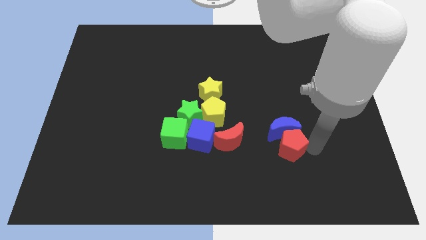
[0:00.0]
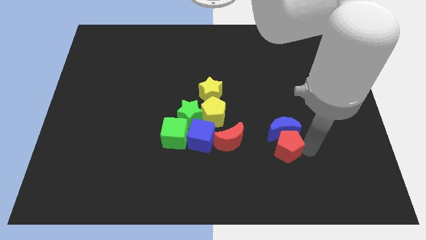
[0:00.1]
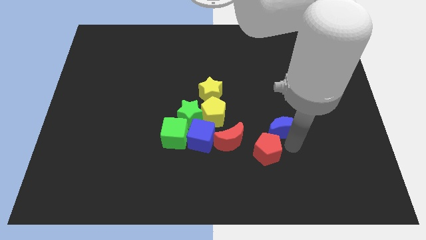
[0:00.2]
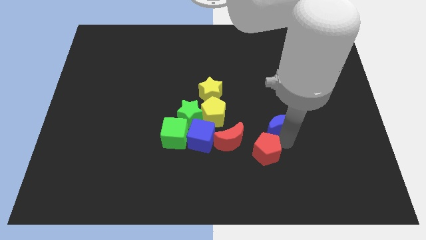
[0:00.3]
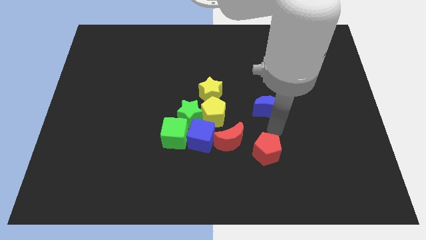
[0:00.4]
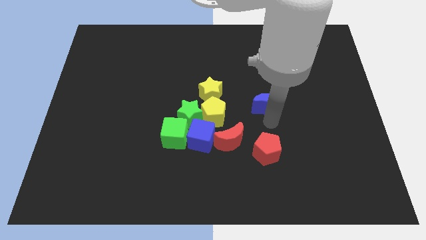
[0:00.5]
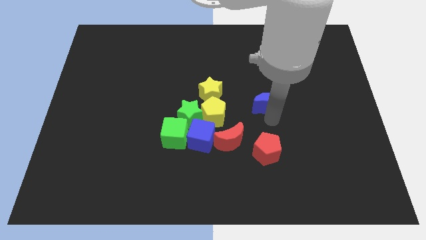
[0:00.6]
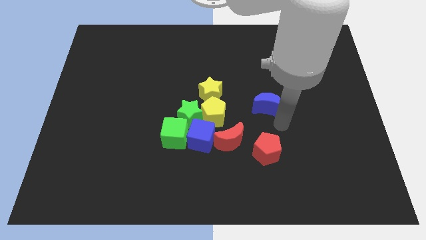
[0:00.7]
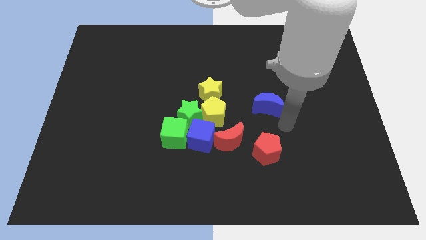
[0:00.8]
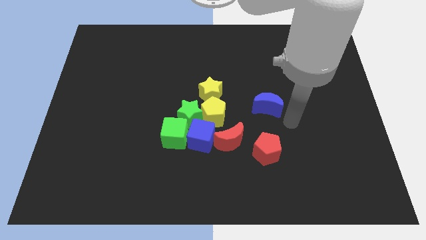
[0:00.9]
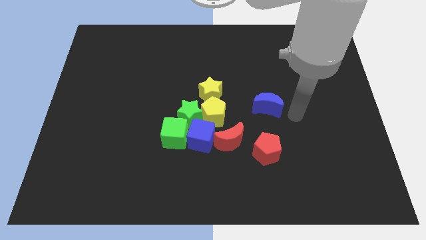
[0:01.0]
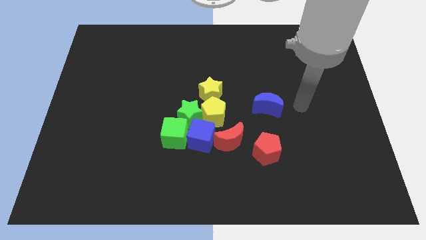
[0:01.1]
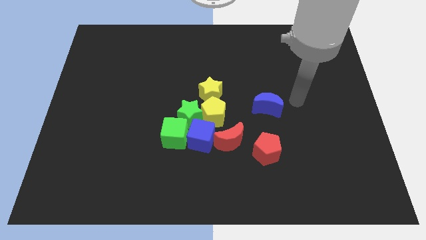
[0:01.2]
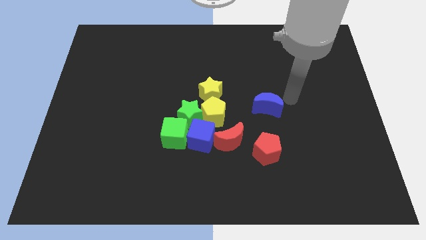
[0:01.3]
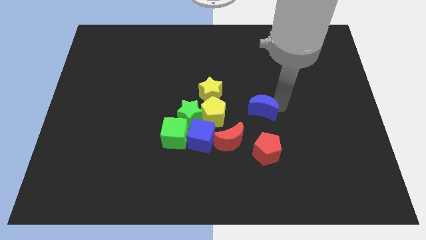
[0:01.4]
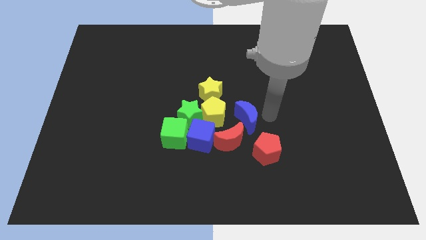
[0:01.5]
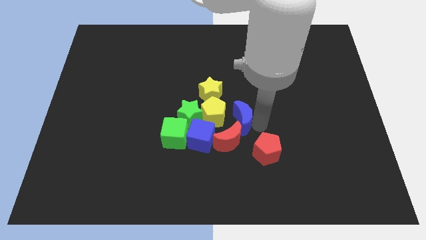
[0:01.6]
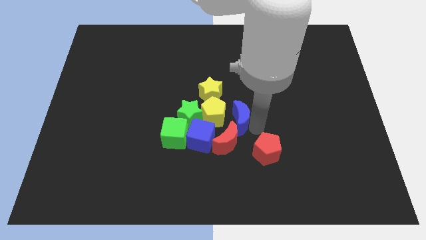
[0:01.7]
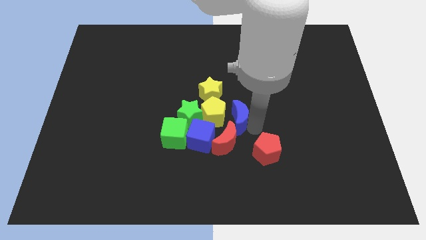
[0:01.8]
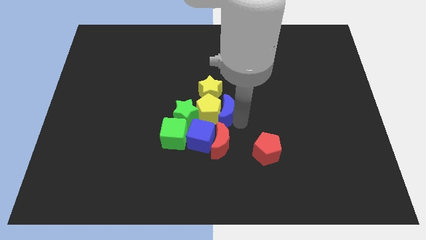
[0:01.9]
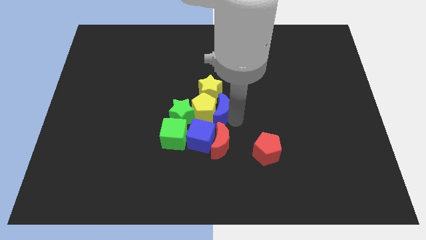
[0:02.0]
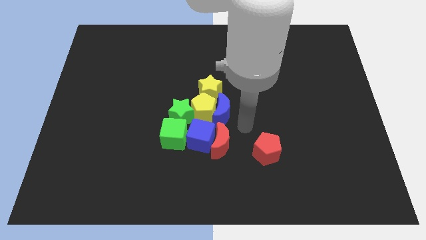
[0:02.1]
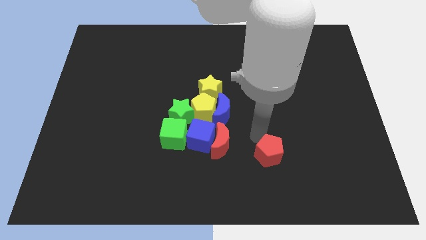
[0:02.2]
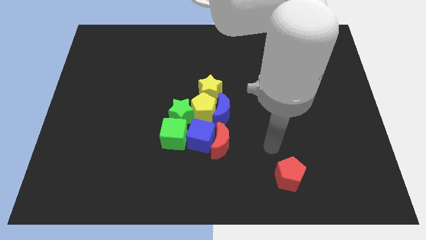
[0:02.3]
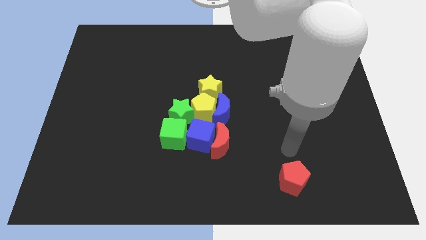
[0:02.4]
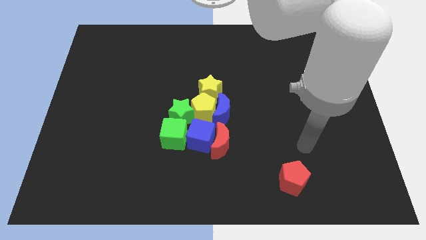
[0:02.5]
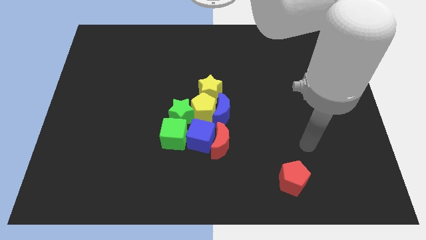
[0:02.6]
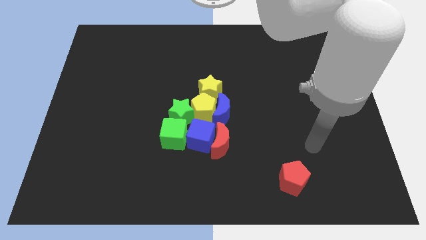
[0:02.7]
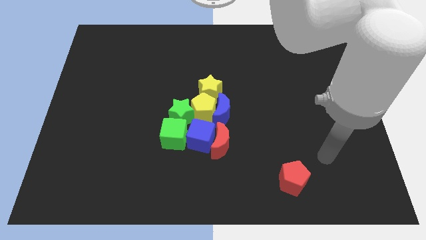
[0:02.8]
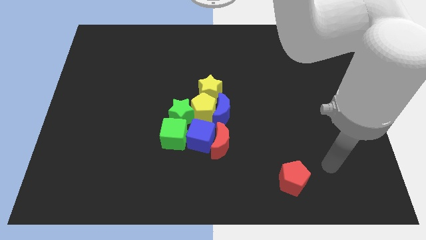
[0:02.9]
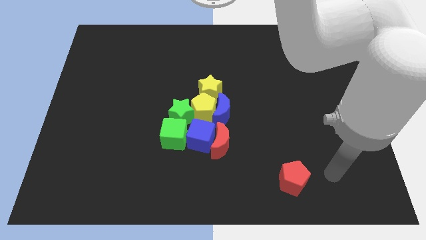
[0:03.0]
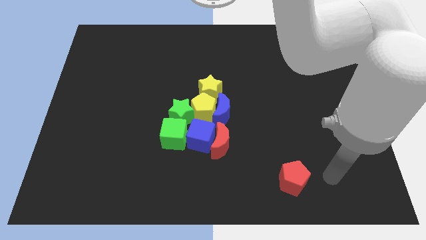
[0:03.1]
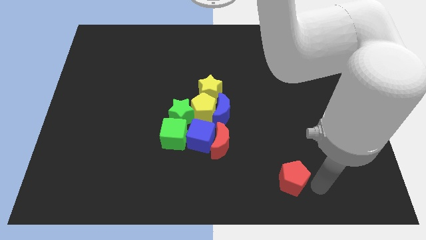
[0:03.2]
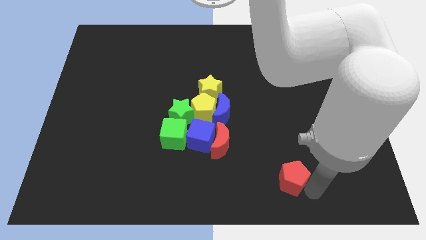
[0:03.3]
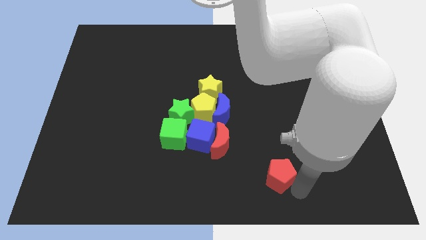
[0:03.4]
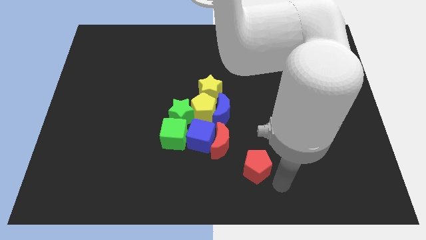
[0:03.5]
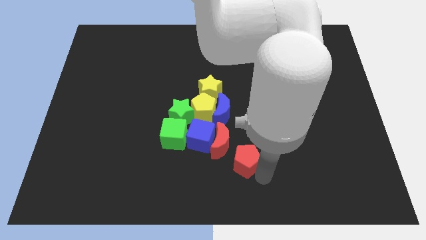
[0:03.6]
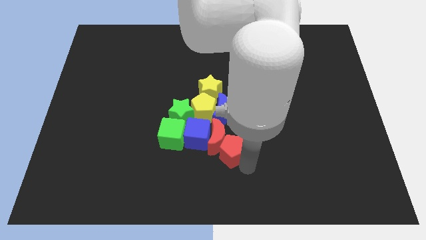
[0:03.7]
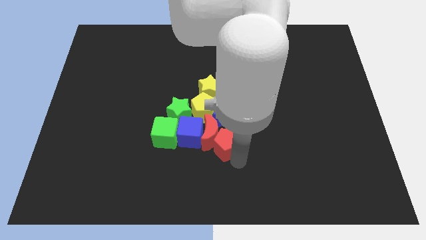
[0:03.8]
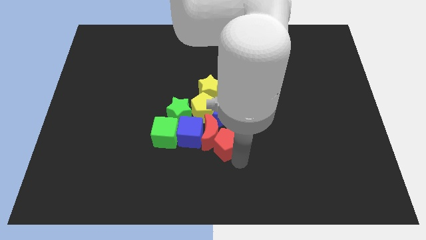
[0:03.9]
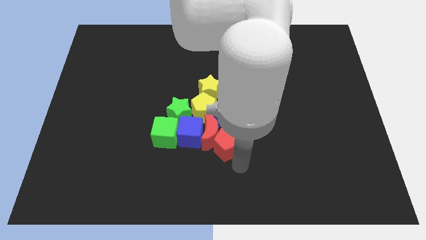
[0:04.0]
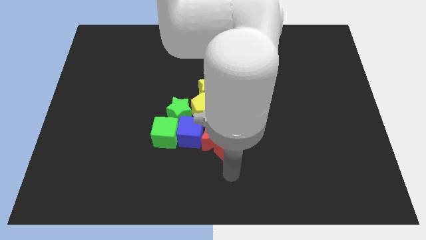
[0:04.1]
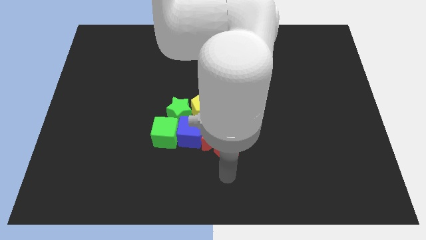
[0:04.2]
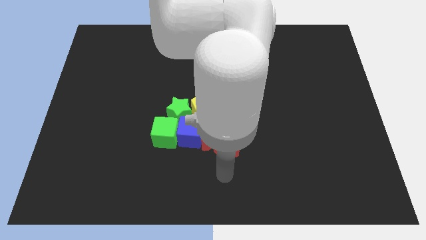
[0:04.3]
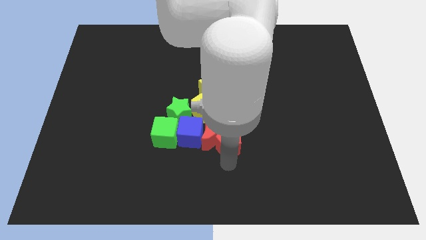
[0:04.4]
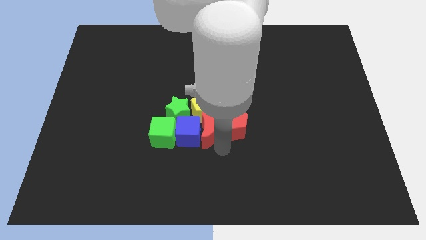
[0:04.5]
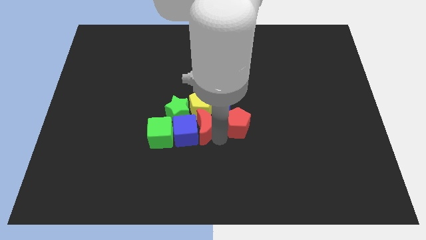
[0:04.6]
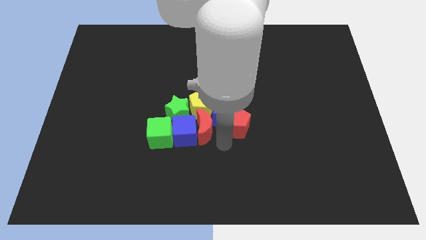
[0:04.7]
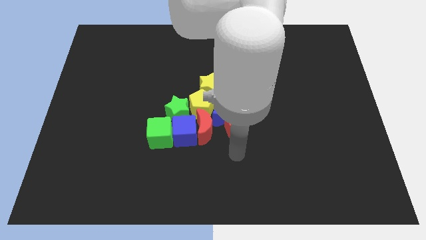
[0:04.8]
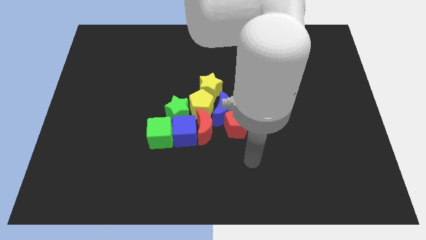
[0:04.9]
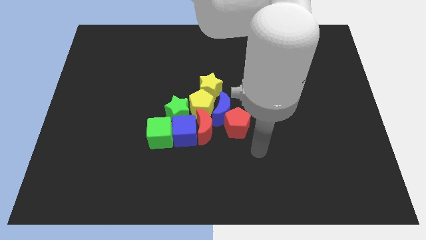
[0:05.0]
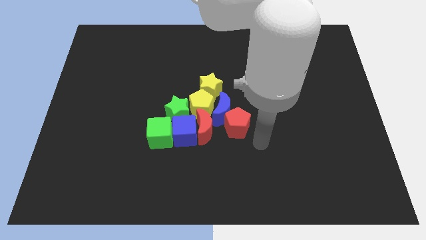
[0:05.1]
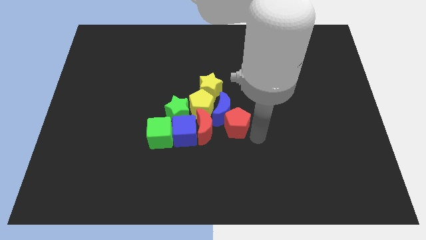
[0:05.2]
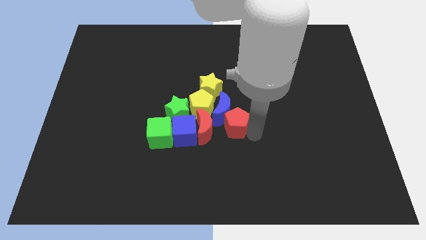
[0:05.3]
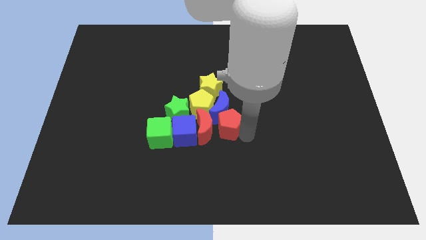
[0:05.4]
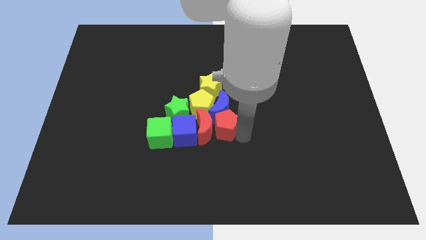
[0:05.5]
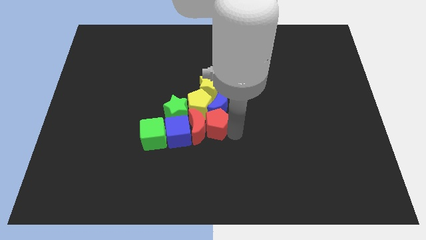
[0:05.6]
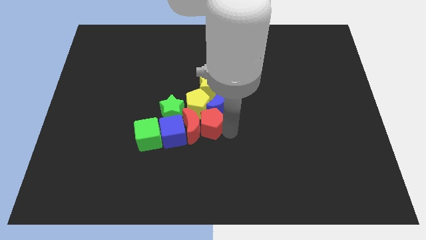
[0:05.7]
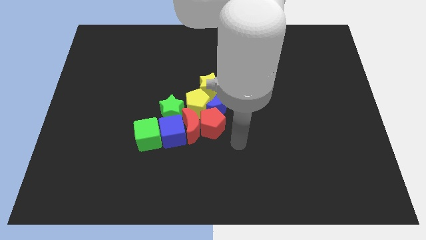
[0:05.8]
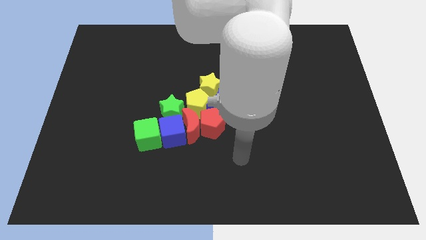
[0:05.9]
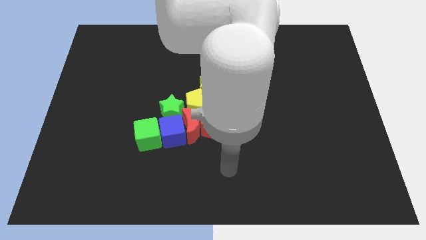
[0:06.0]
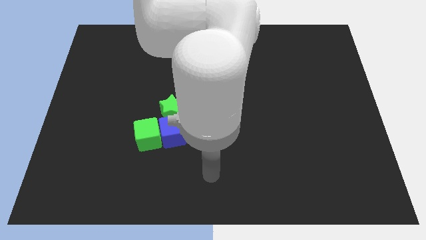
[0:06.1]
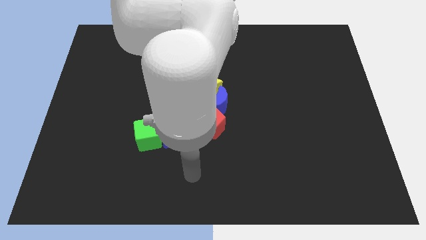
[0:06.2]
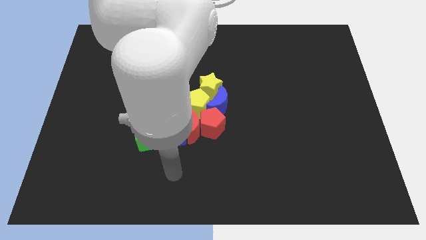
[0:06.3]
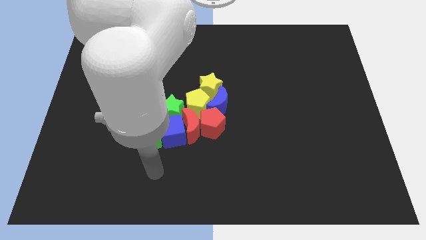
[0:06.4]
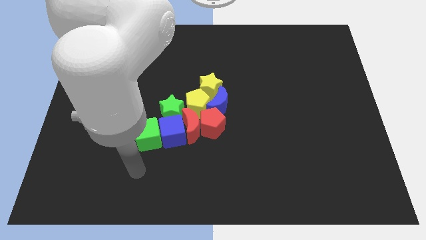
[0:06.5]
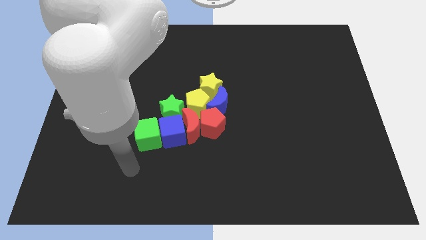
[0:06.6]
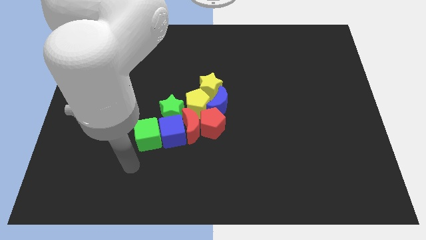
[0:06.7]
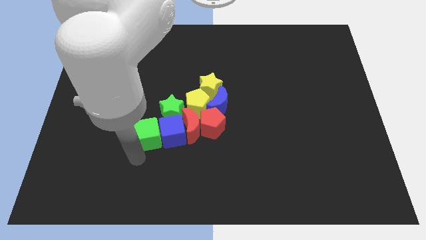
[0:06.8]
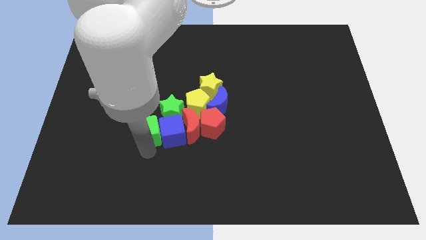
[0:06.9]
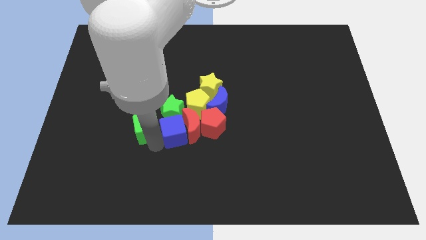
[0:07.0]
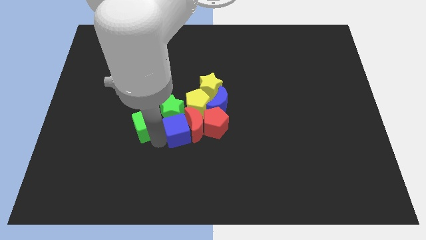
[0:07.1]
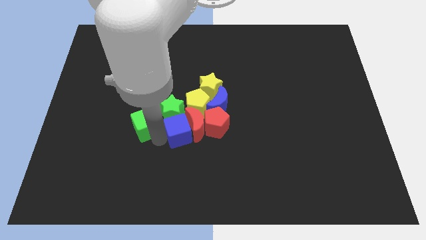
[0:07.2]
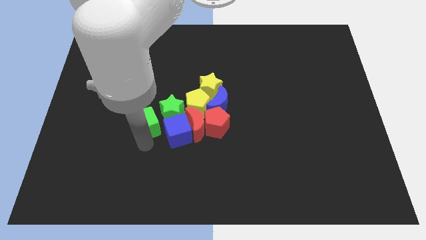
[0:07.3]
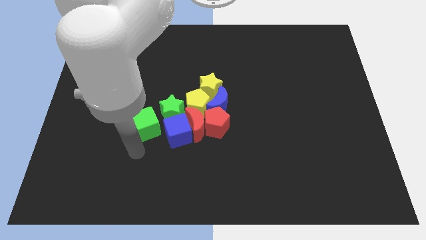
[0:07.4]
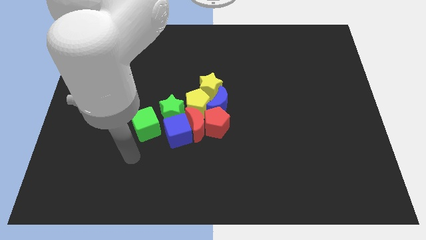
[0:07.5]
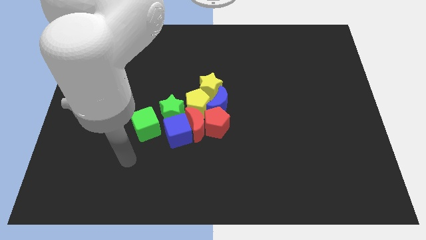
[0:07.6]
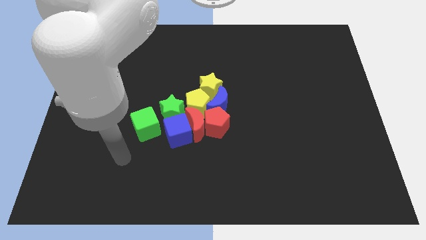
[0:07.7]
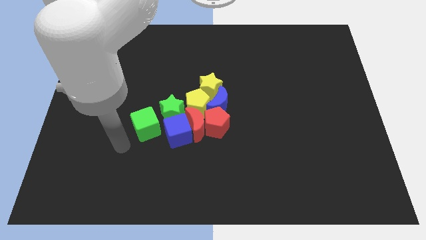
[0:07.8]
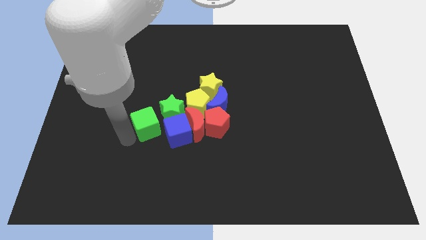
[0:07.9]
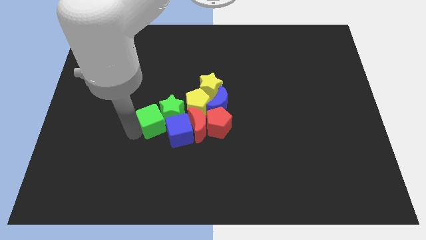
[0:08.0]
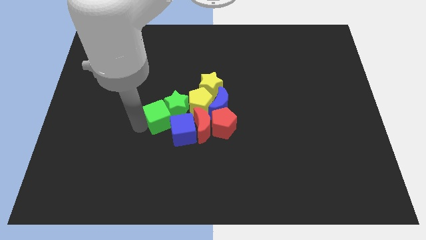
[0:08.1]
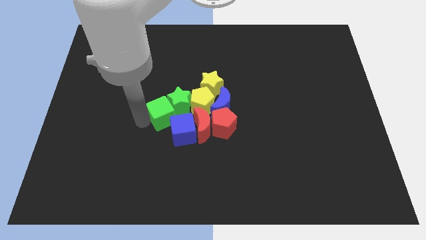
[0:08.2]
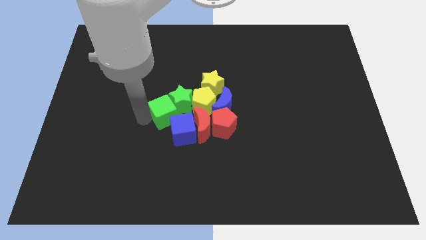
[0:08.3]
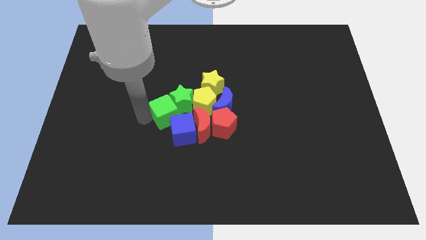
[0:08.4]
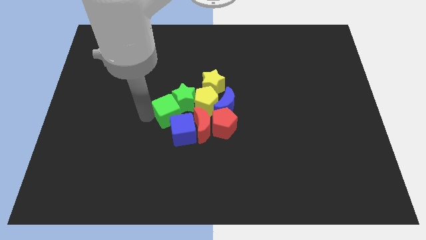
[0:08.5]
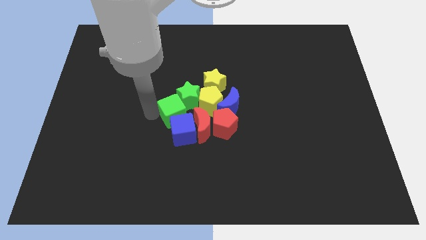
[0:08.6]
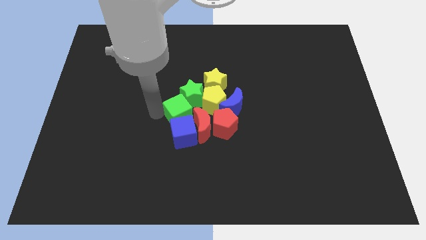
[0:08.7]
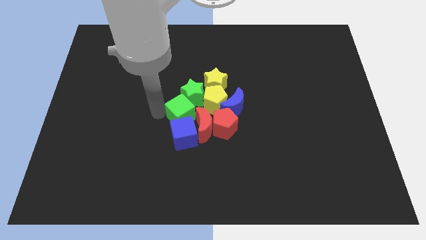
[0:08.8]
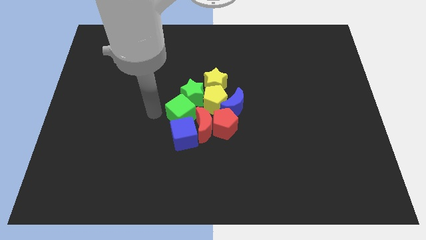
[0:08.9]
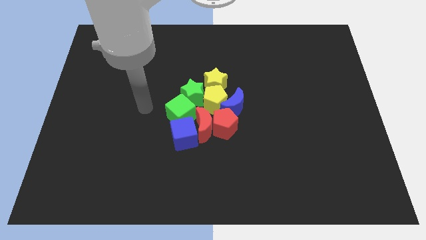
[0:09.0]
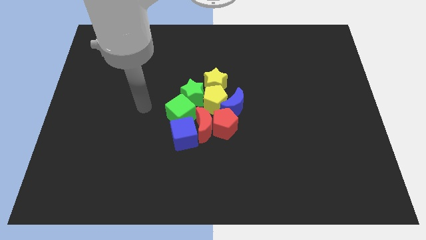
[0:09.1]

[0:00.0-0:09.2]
adjust group of blocks towards the center
